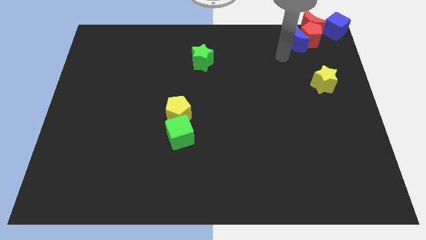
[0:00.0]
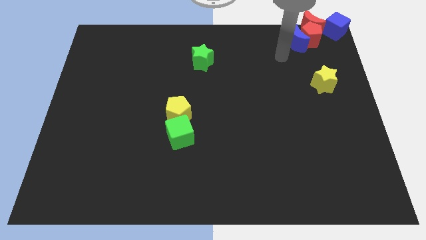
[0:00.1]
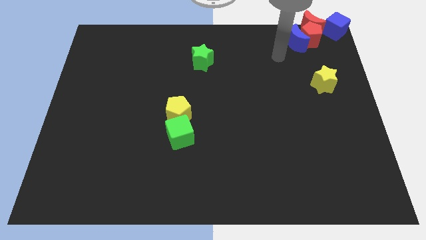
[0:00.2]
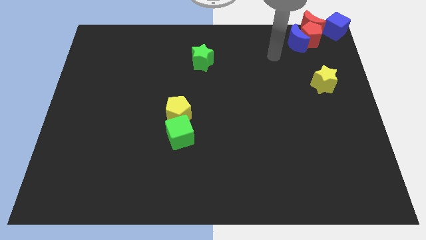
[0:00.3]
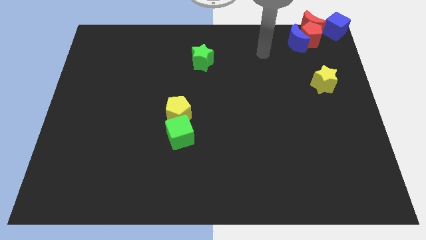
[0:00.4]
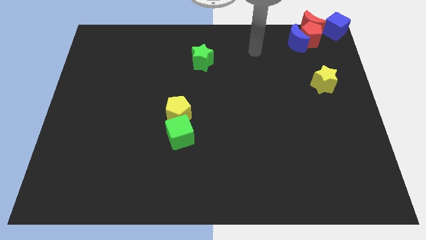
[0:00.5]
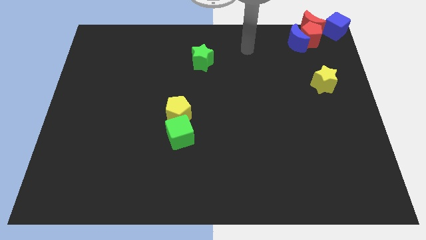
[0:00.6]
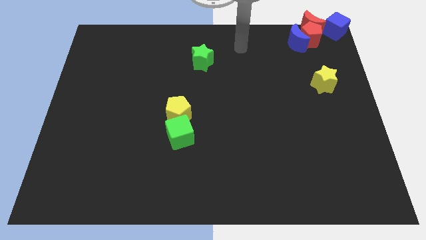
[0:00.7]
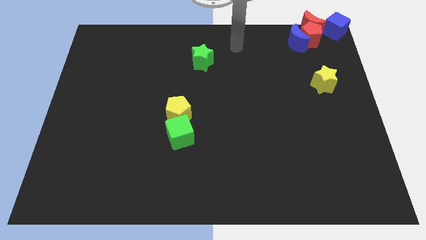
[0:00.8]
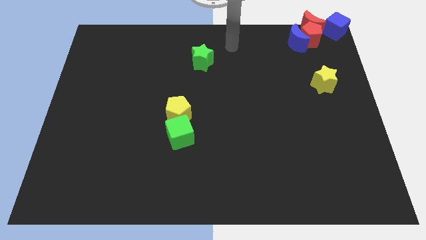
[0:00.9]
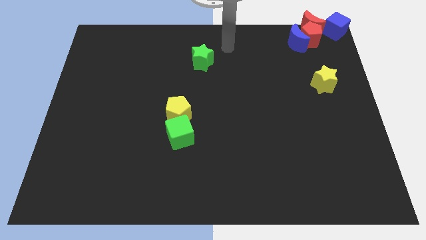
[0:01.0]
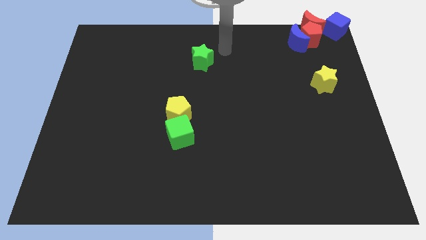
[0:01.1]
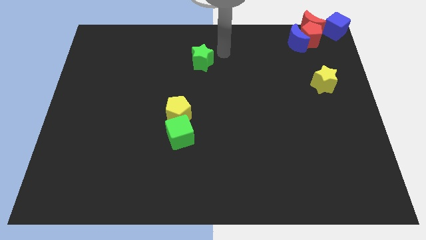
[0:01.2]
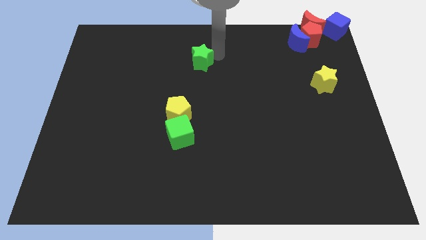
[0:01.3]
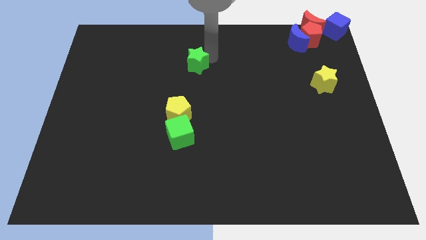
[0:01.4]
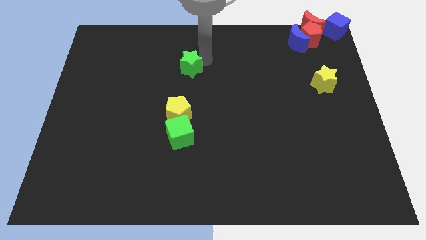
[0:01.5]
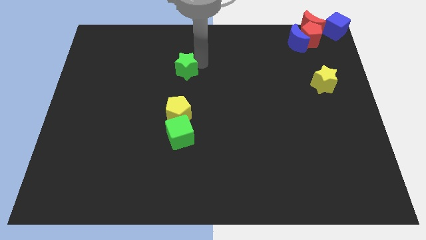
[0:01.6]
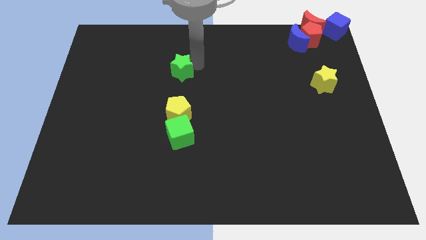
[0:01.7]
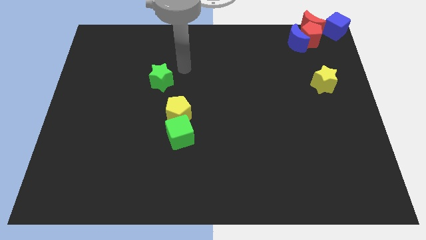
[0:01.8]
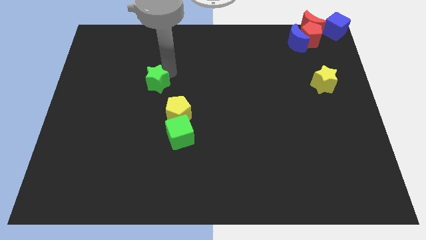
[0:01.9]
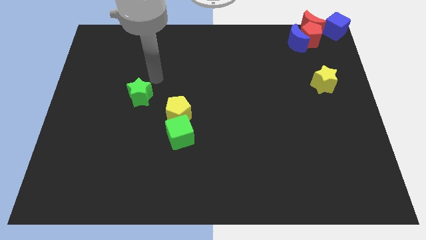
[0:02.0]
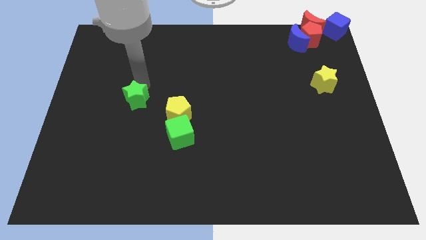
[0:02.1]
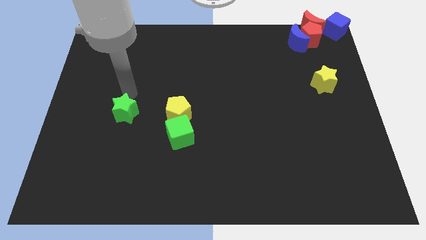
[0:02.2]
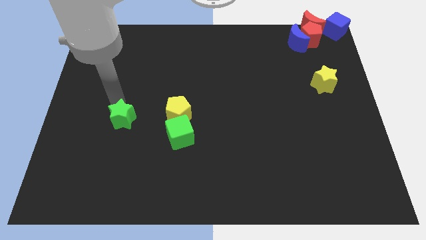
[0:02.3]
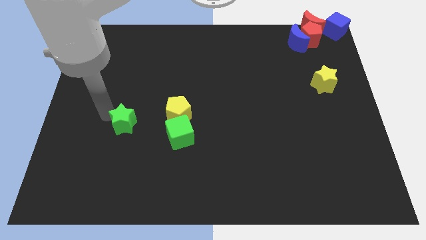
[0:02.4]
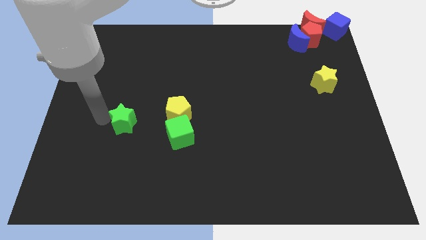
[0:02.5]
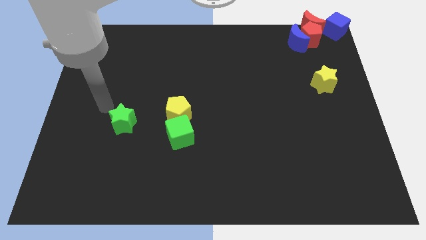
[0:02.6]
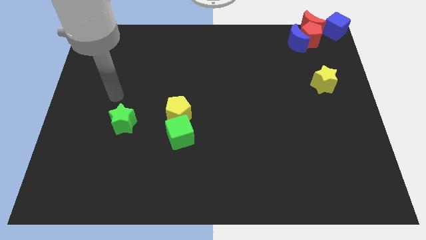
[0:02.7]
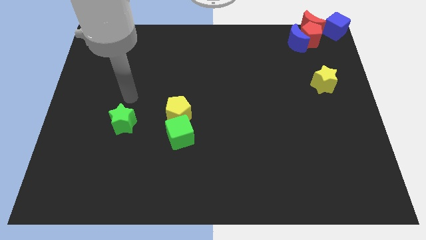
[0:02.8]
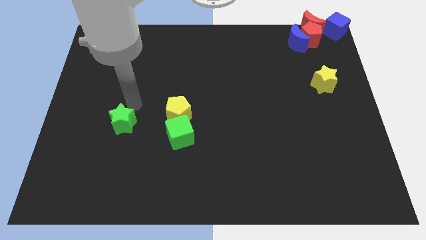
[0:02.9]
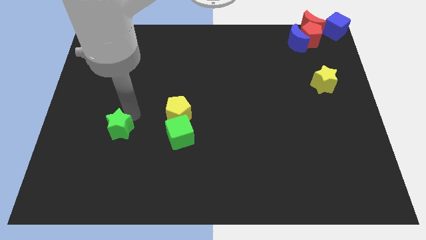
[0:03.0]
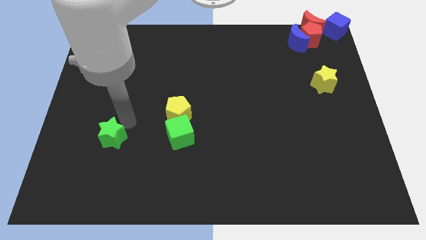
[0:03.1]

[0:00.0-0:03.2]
push the green star horizontally to the left side of the green cube

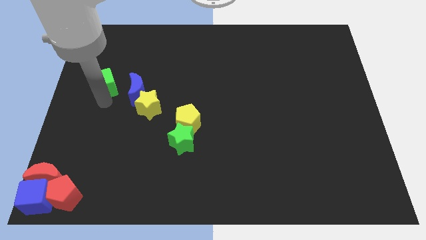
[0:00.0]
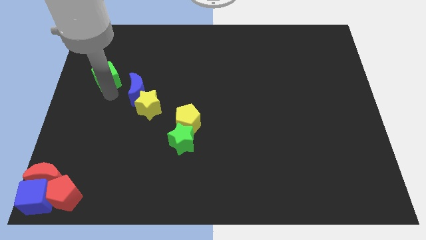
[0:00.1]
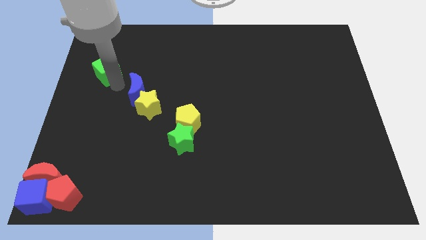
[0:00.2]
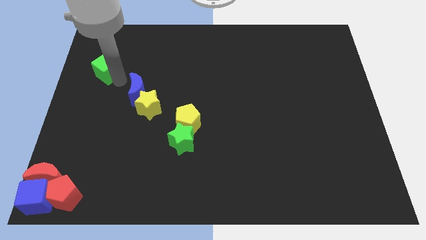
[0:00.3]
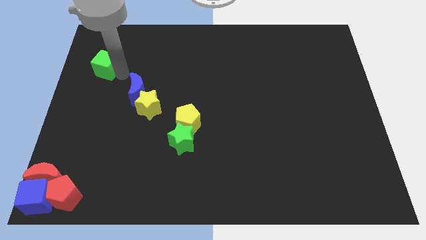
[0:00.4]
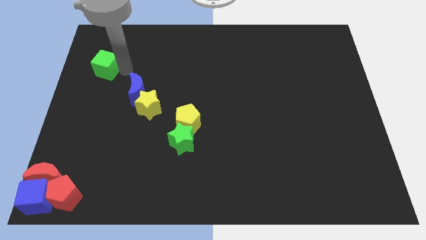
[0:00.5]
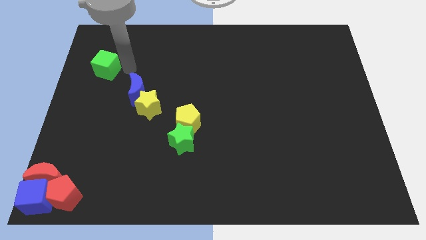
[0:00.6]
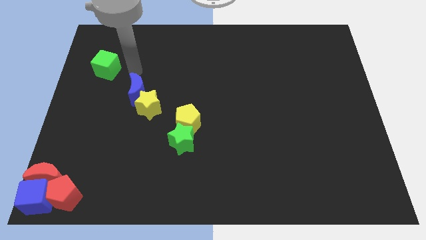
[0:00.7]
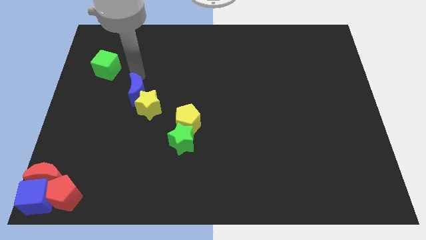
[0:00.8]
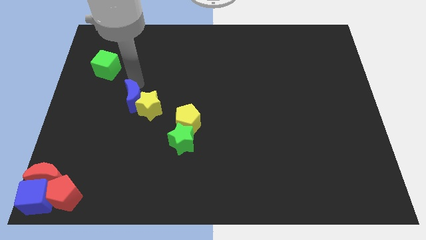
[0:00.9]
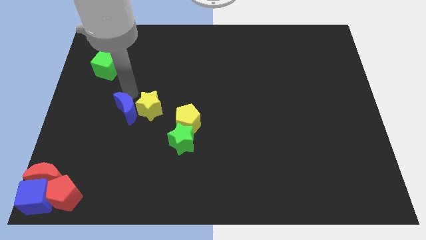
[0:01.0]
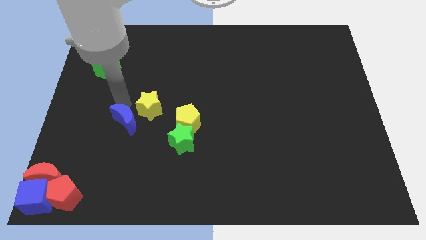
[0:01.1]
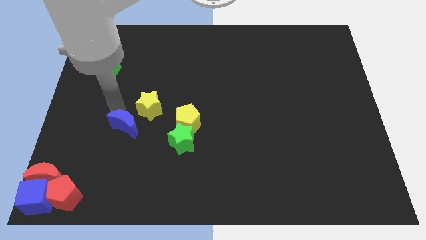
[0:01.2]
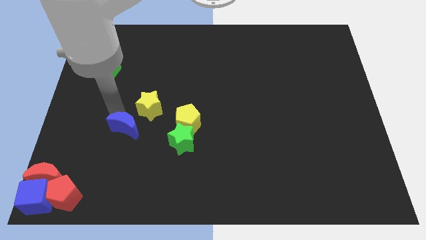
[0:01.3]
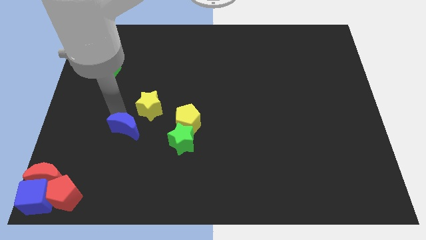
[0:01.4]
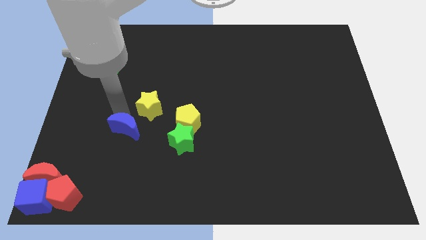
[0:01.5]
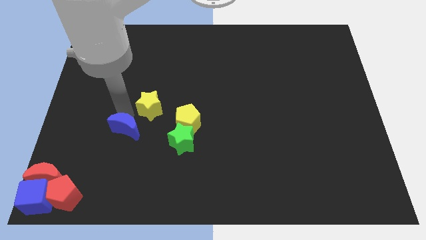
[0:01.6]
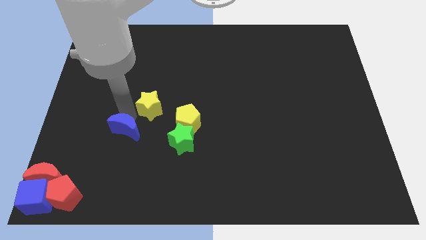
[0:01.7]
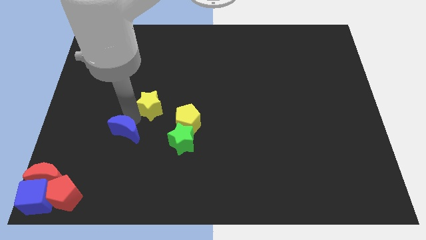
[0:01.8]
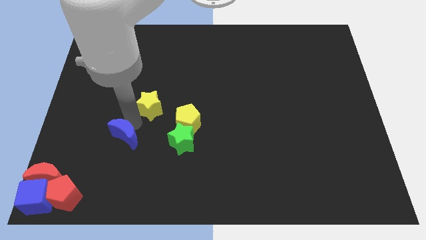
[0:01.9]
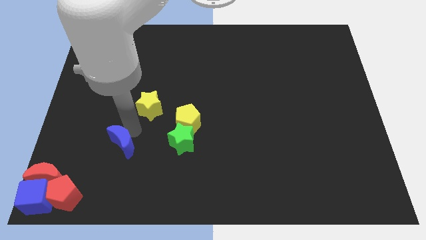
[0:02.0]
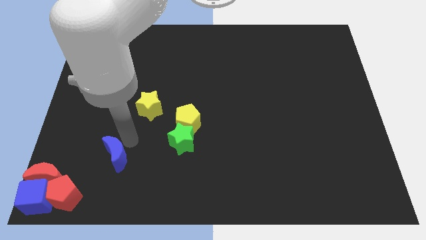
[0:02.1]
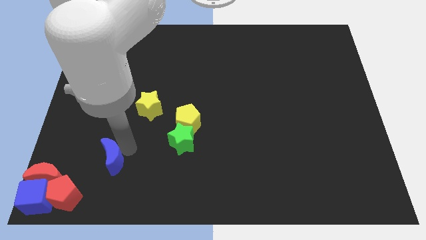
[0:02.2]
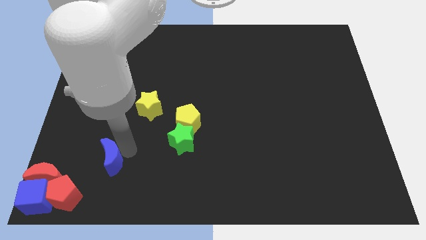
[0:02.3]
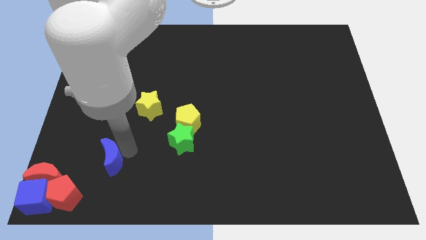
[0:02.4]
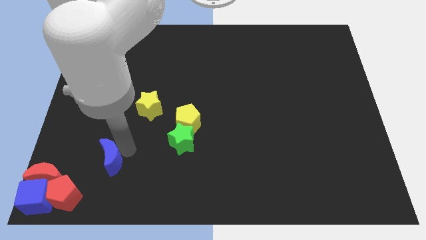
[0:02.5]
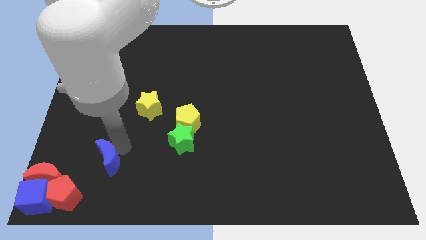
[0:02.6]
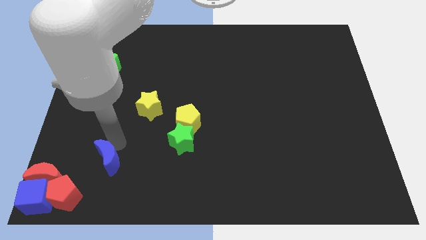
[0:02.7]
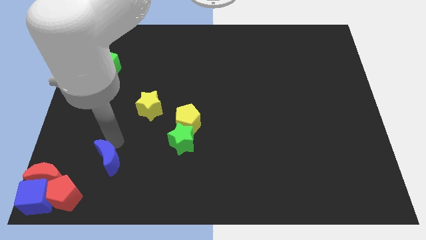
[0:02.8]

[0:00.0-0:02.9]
separate blue crescent from the yellow star

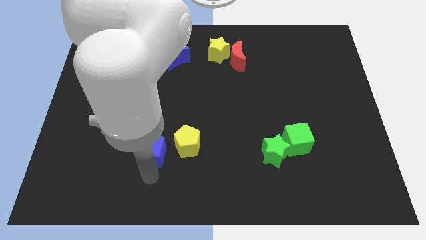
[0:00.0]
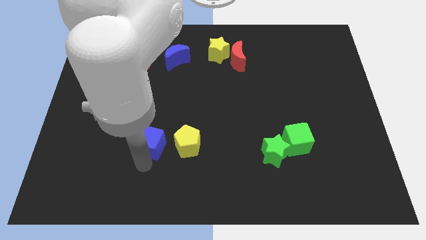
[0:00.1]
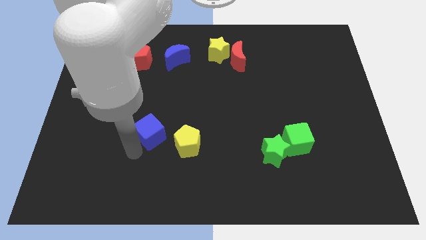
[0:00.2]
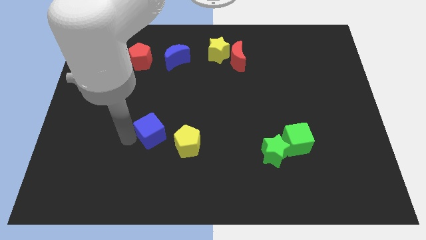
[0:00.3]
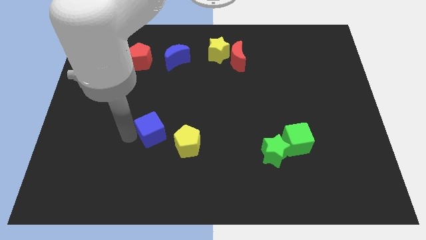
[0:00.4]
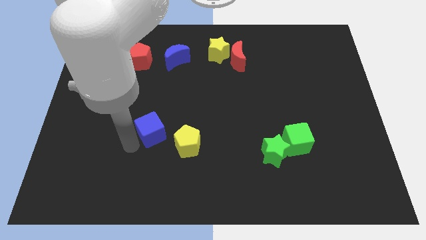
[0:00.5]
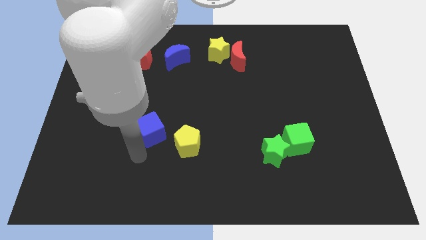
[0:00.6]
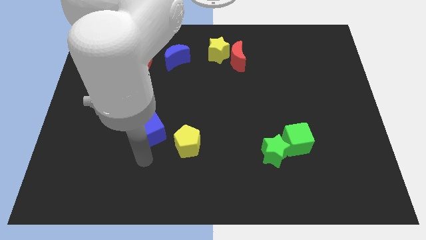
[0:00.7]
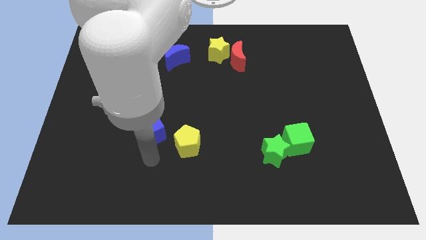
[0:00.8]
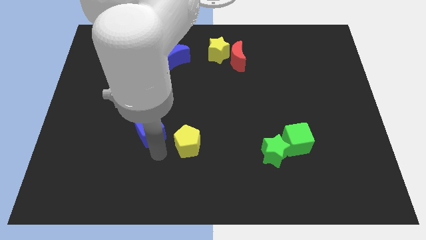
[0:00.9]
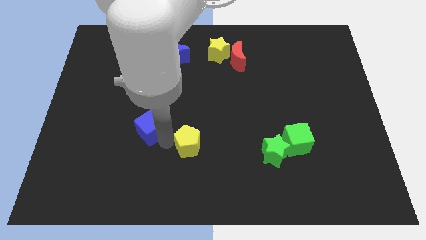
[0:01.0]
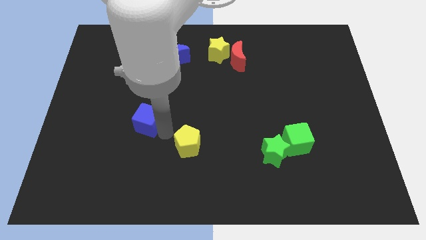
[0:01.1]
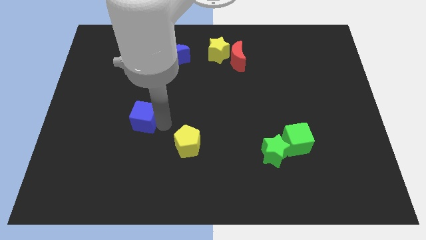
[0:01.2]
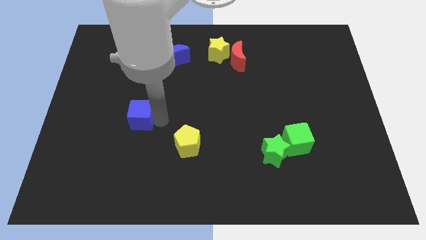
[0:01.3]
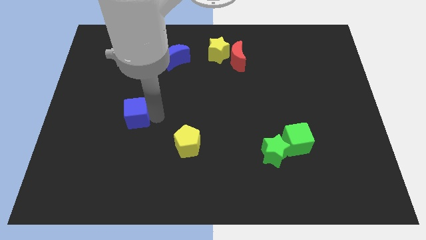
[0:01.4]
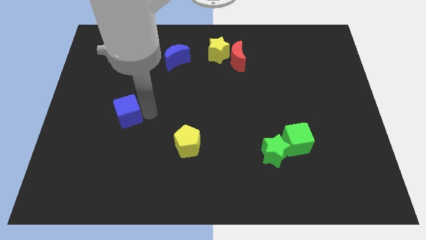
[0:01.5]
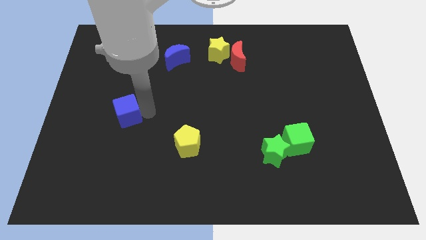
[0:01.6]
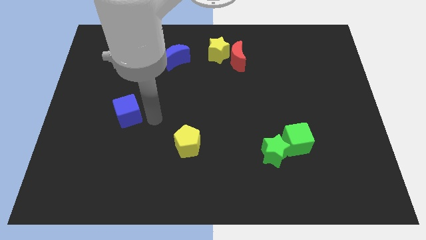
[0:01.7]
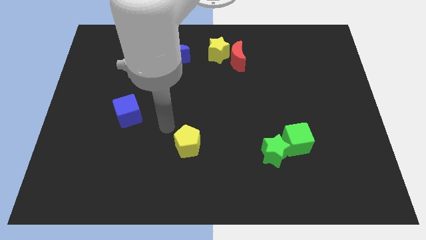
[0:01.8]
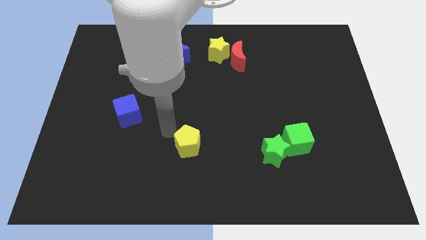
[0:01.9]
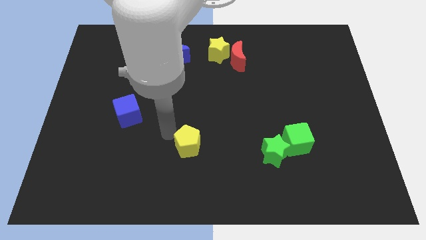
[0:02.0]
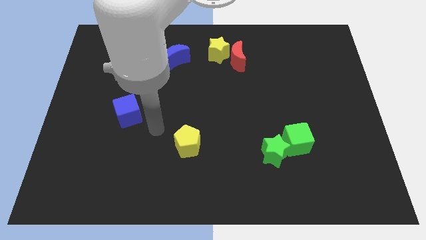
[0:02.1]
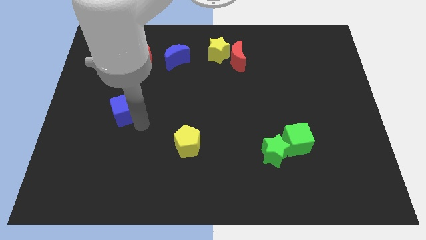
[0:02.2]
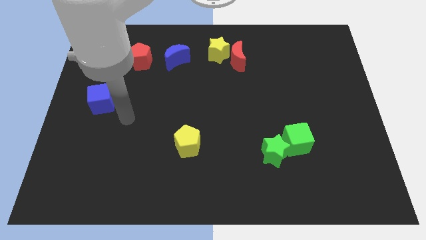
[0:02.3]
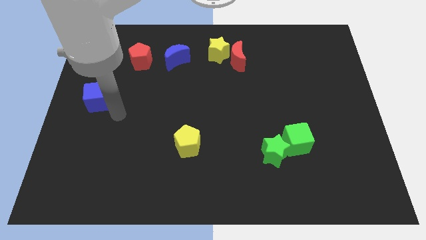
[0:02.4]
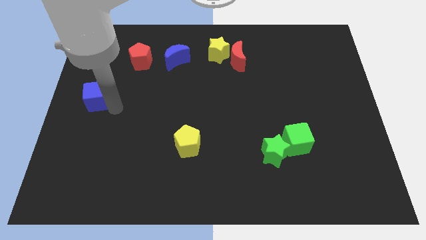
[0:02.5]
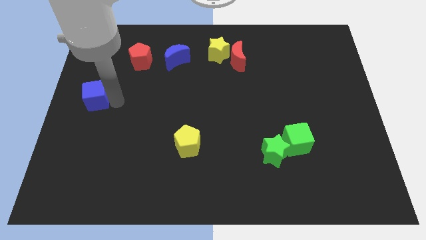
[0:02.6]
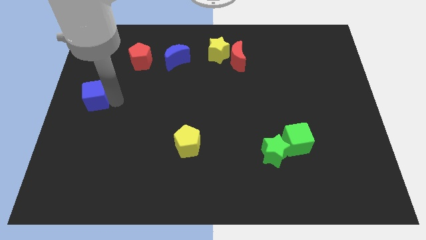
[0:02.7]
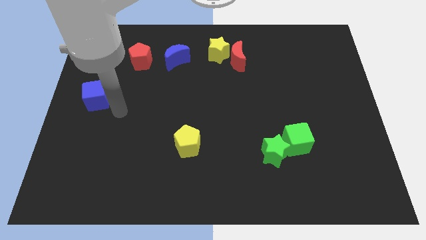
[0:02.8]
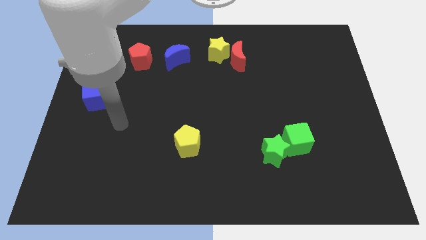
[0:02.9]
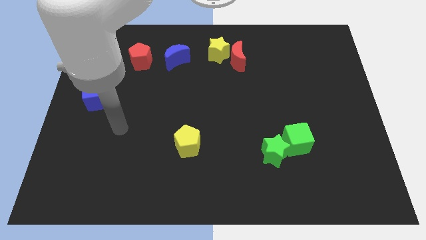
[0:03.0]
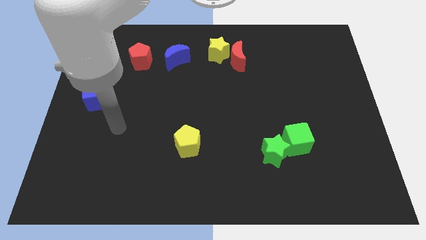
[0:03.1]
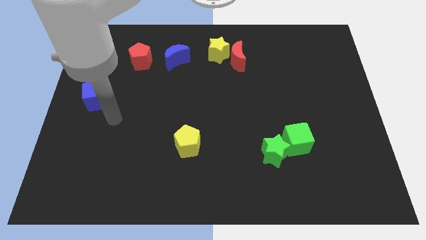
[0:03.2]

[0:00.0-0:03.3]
move the blue cube to the centre left of the board
